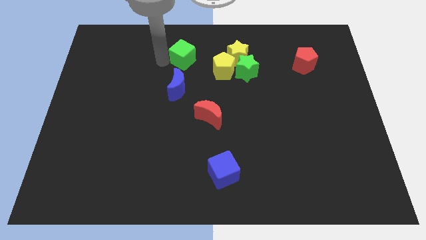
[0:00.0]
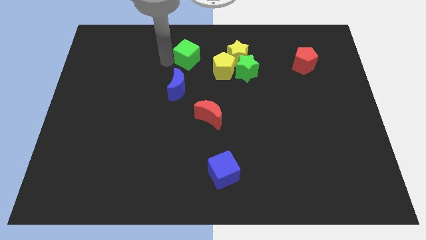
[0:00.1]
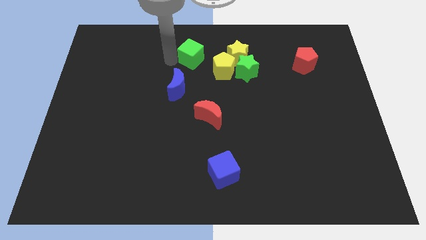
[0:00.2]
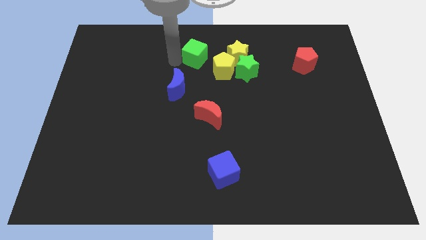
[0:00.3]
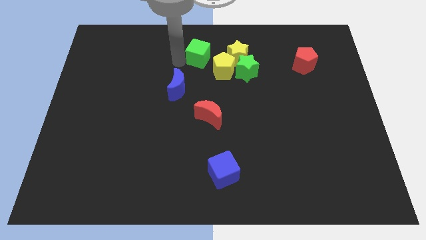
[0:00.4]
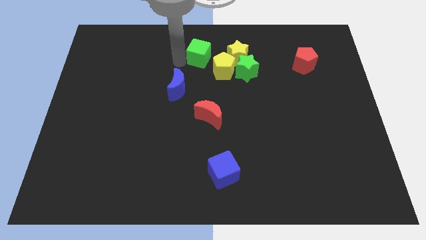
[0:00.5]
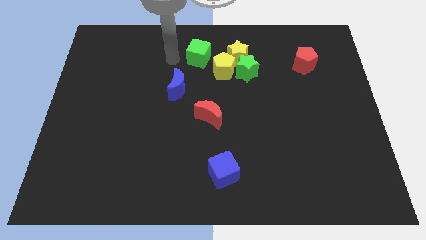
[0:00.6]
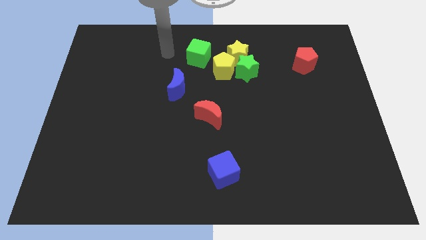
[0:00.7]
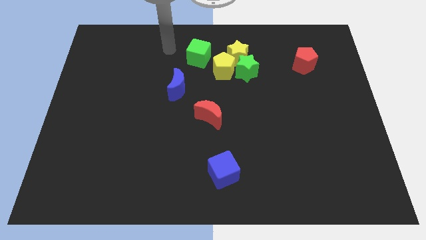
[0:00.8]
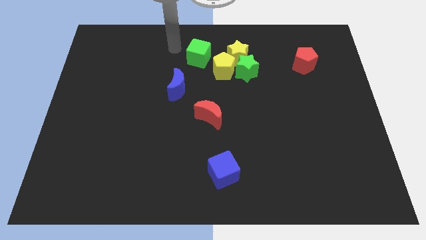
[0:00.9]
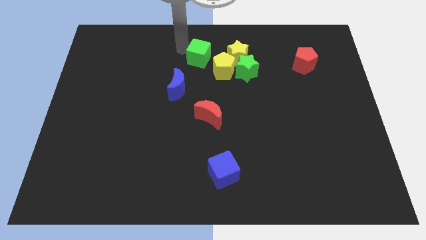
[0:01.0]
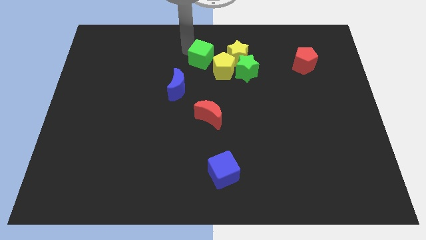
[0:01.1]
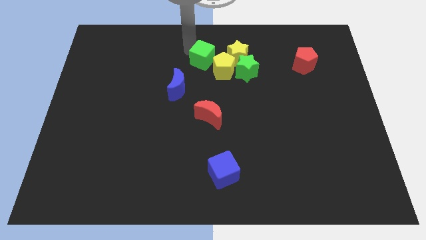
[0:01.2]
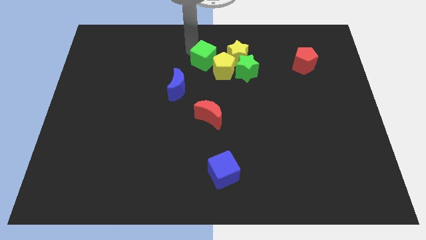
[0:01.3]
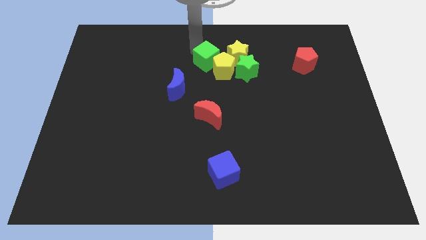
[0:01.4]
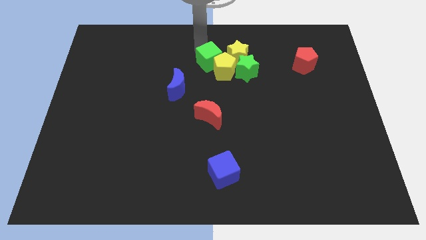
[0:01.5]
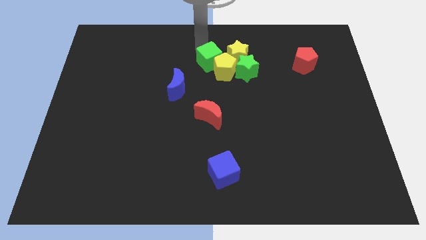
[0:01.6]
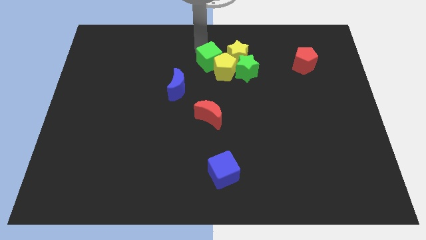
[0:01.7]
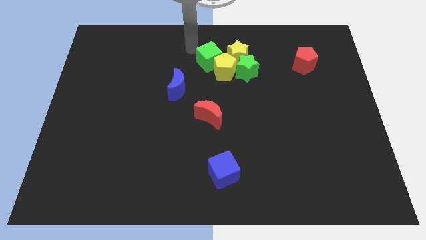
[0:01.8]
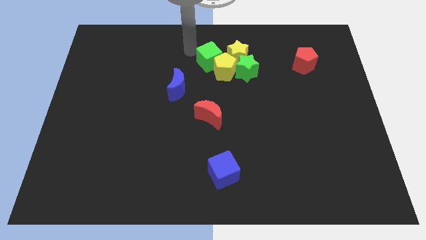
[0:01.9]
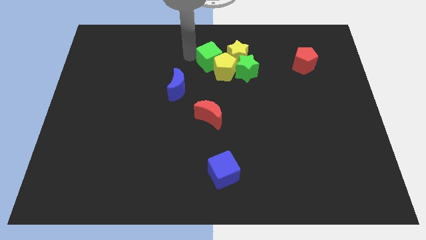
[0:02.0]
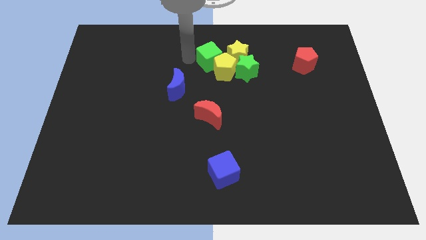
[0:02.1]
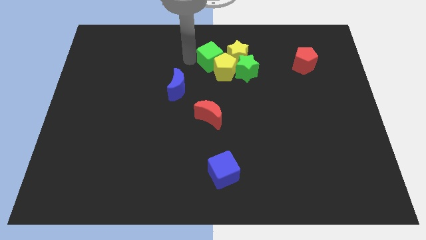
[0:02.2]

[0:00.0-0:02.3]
push the green cube into the yellow pentagon

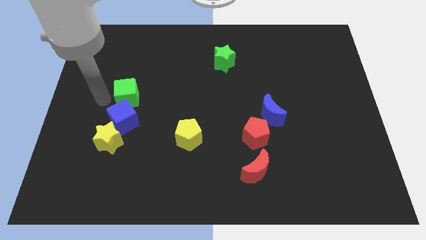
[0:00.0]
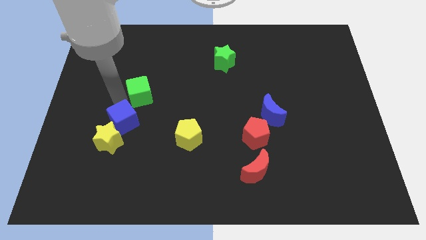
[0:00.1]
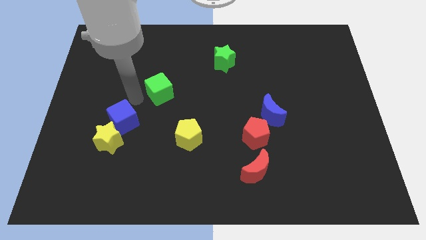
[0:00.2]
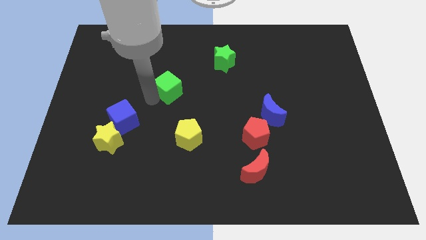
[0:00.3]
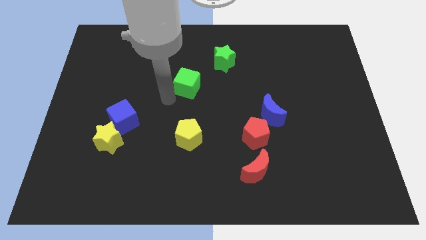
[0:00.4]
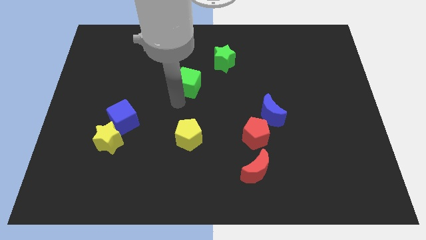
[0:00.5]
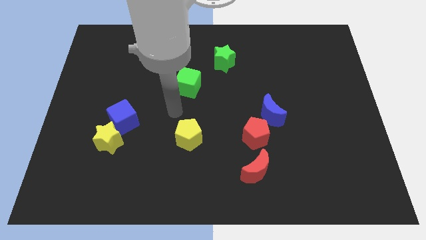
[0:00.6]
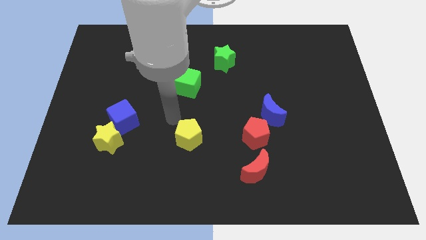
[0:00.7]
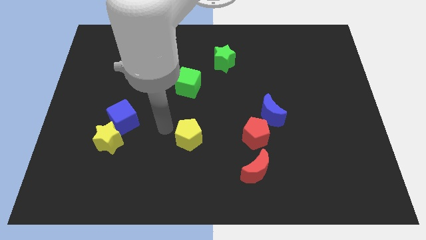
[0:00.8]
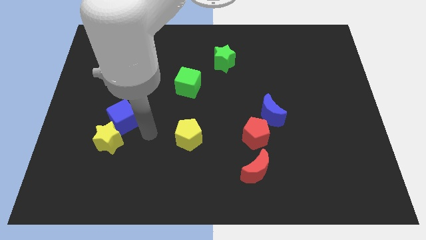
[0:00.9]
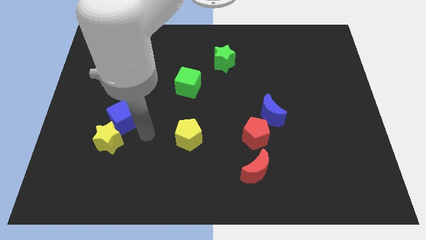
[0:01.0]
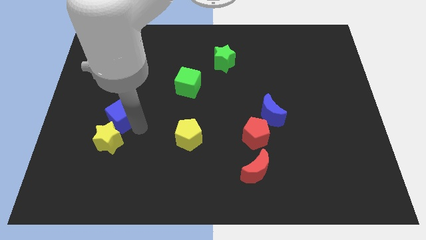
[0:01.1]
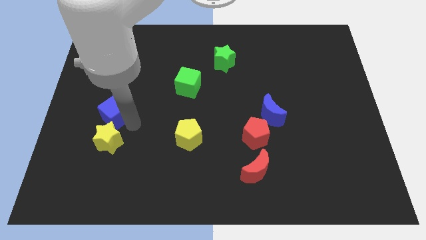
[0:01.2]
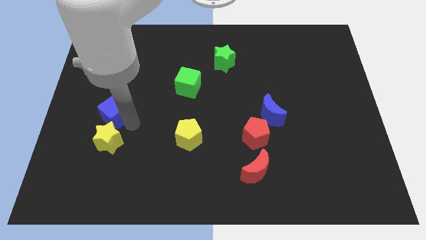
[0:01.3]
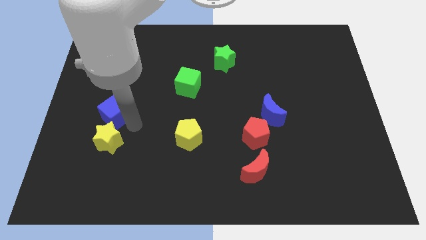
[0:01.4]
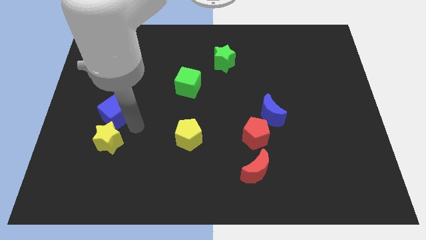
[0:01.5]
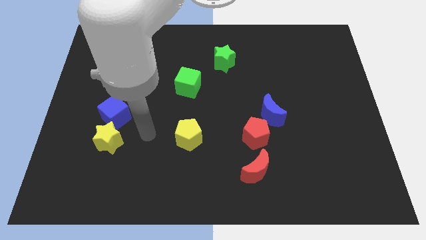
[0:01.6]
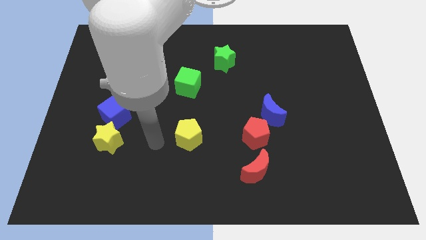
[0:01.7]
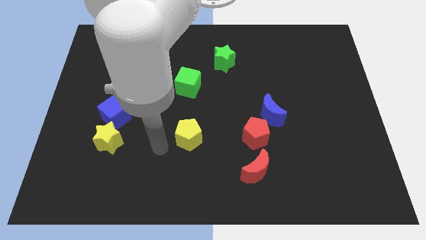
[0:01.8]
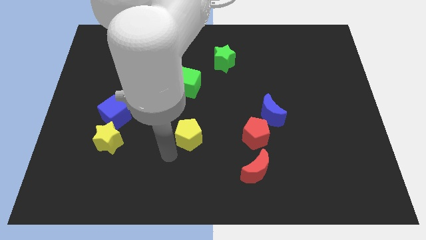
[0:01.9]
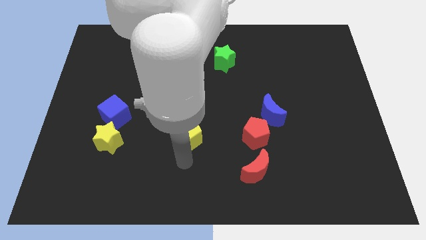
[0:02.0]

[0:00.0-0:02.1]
place the green cube at the top of yellow pentagon

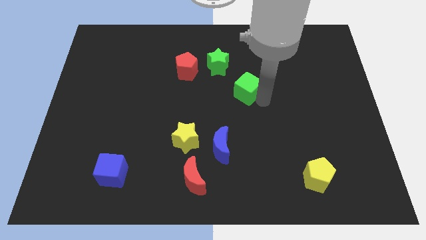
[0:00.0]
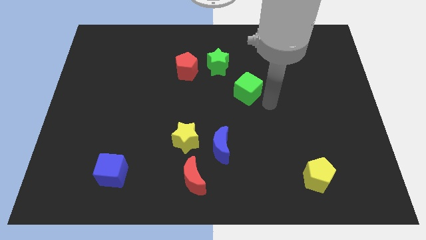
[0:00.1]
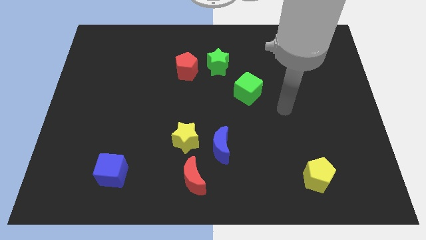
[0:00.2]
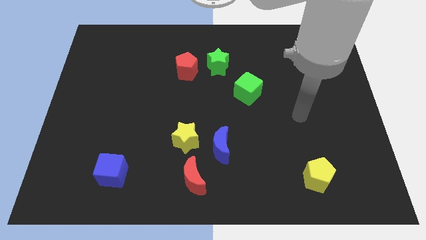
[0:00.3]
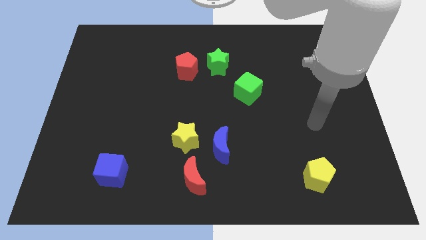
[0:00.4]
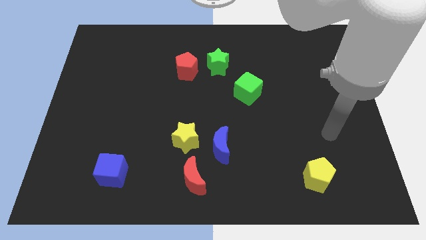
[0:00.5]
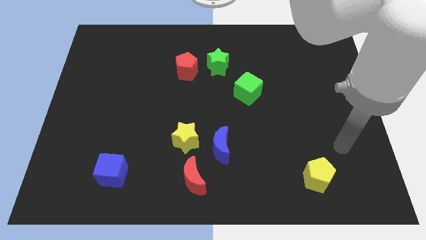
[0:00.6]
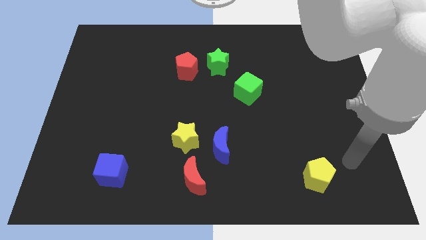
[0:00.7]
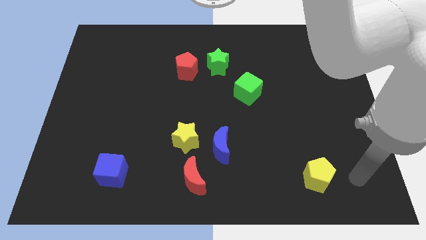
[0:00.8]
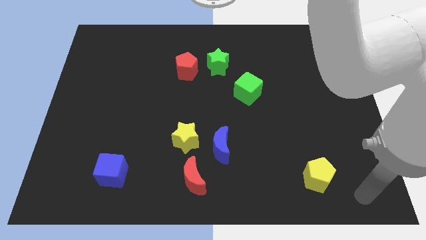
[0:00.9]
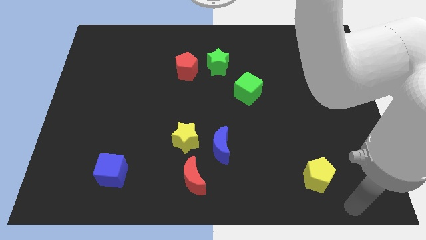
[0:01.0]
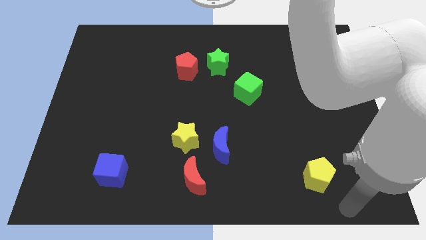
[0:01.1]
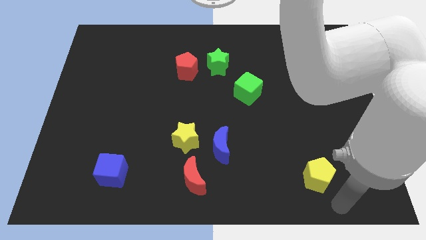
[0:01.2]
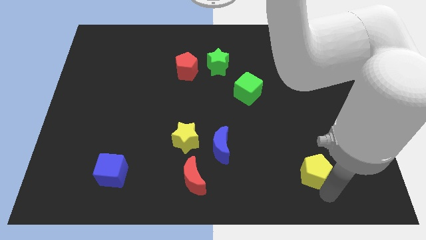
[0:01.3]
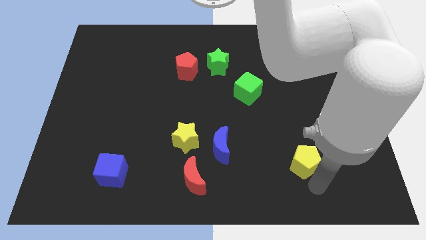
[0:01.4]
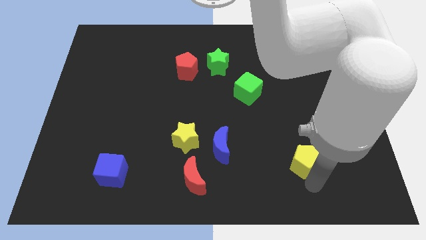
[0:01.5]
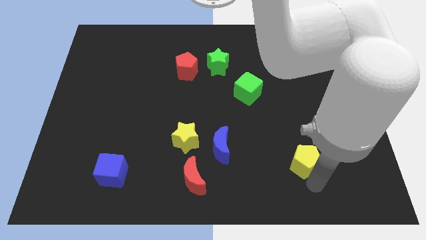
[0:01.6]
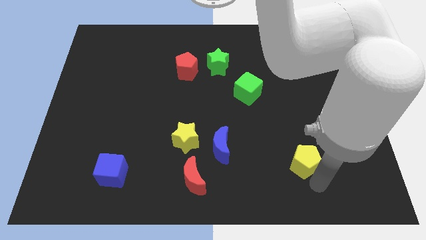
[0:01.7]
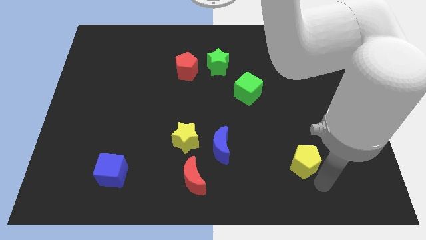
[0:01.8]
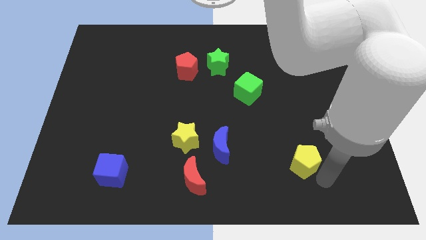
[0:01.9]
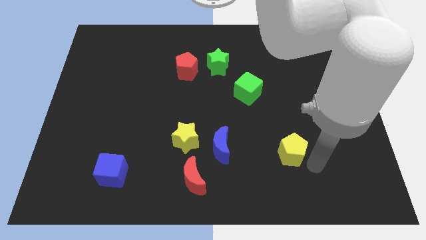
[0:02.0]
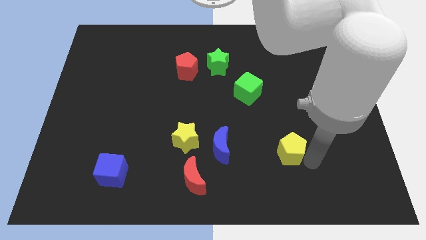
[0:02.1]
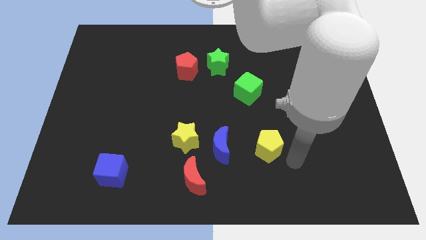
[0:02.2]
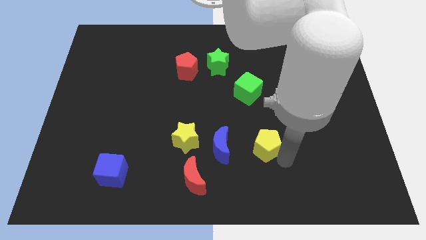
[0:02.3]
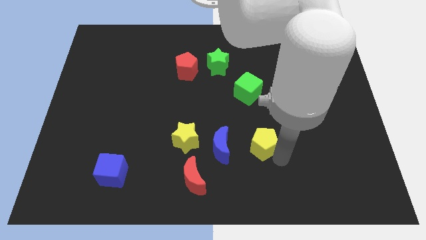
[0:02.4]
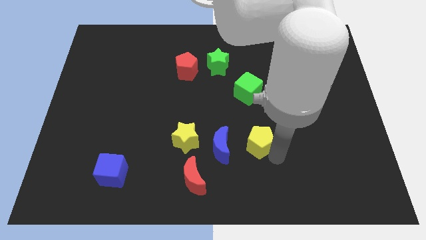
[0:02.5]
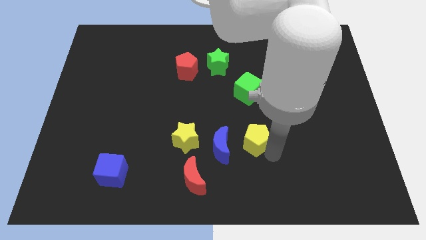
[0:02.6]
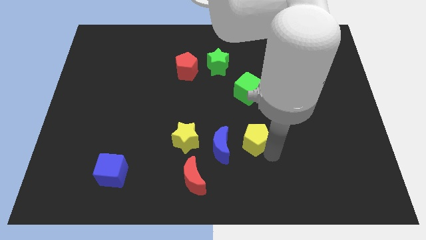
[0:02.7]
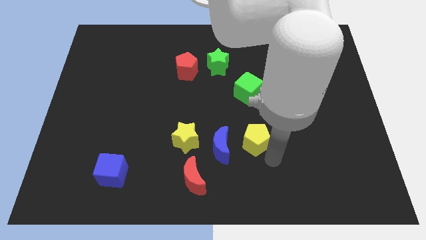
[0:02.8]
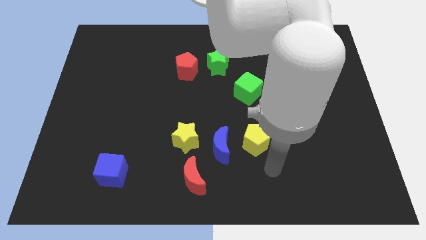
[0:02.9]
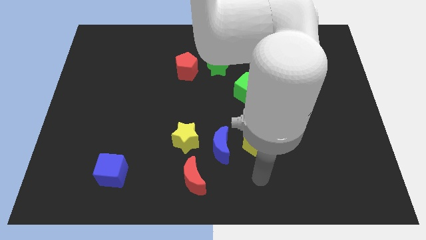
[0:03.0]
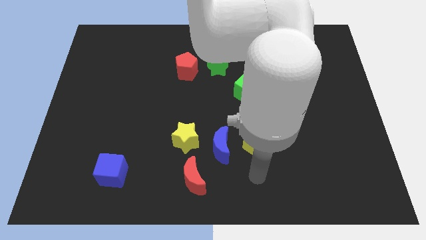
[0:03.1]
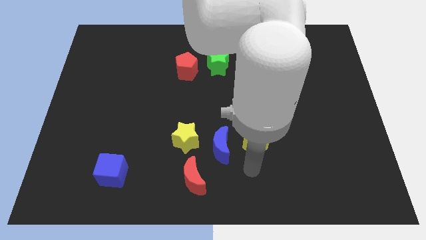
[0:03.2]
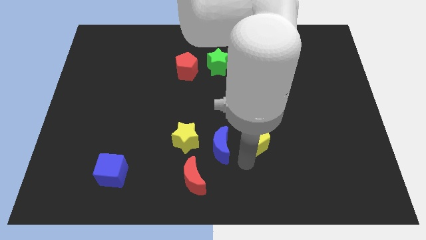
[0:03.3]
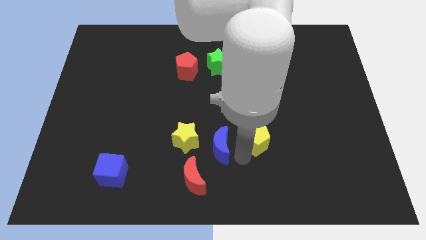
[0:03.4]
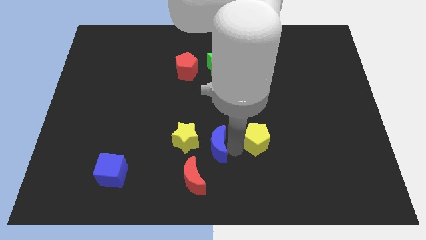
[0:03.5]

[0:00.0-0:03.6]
push the yellow penatgon to the right of blue moon

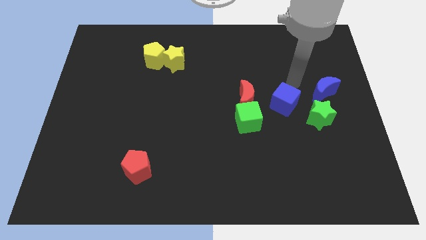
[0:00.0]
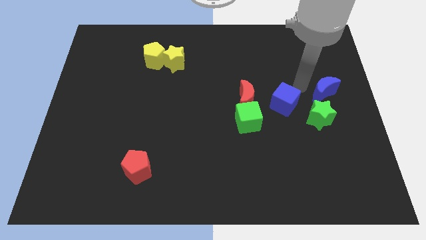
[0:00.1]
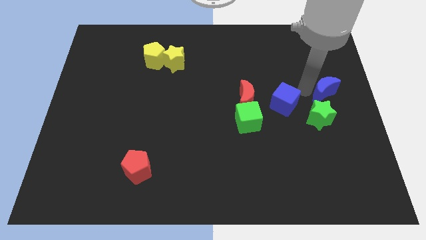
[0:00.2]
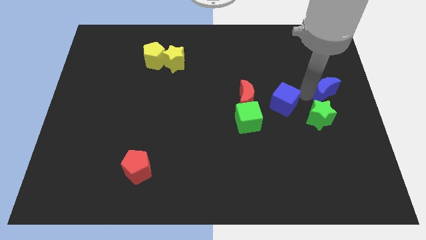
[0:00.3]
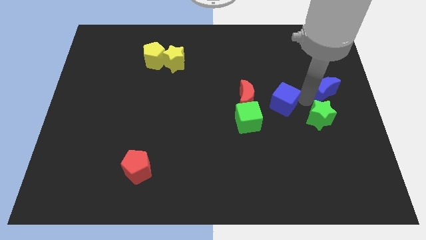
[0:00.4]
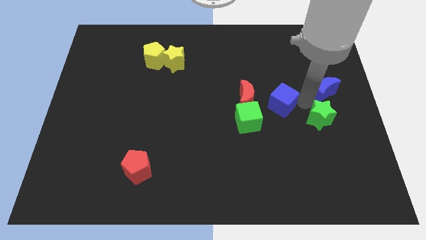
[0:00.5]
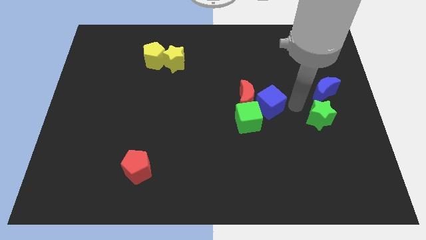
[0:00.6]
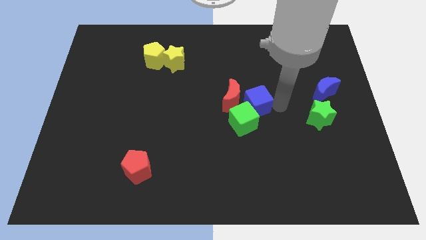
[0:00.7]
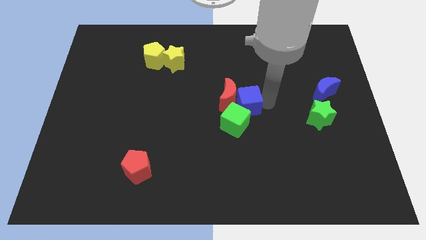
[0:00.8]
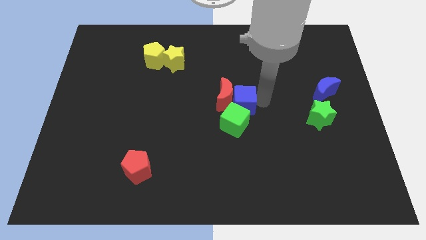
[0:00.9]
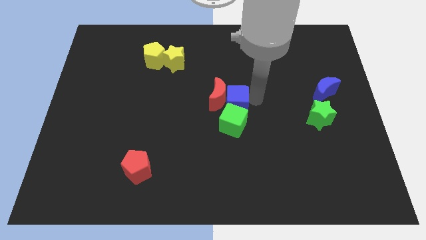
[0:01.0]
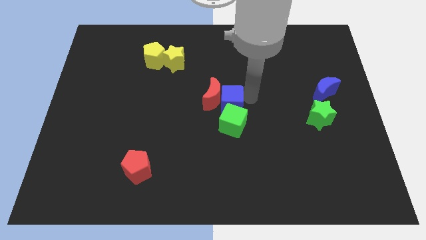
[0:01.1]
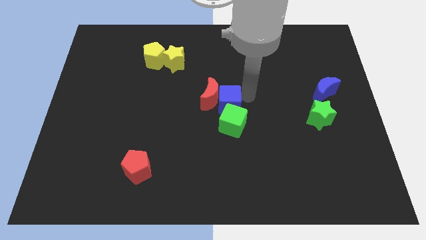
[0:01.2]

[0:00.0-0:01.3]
push the blue cube into the red crescent
